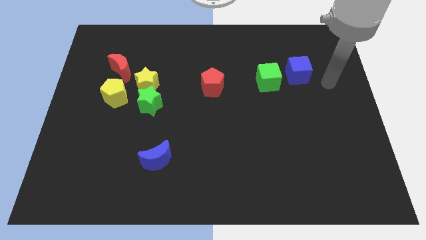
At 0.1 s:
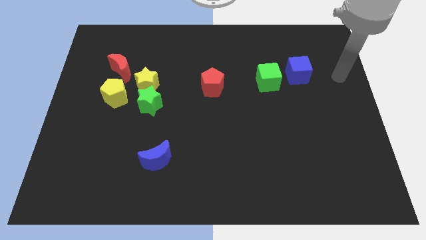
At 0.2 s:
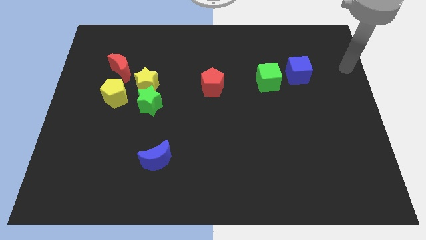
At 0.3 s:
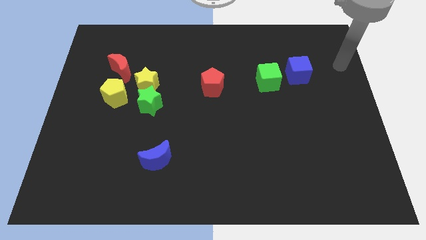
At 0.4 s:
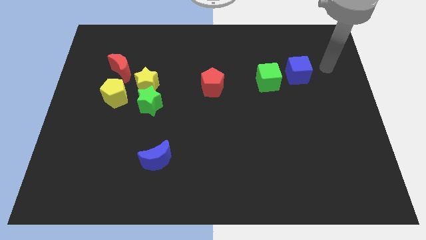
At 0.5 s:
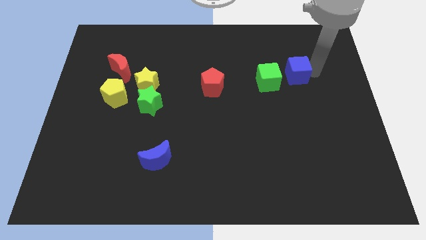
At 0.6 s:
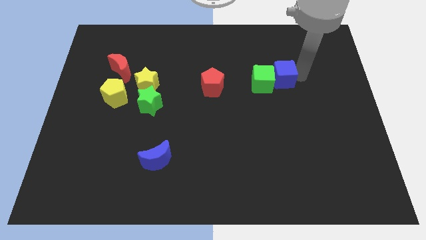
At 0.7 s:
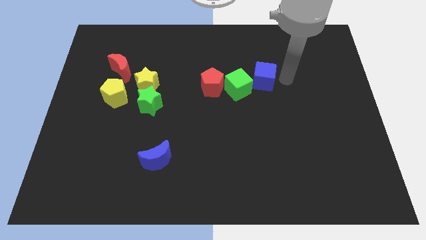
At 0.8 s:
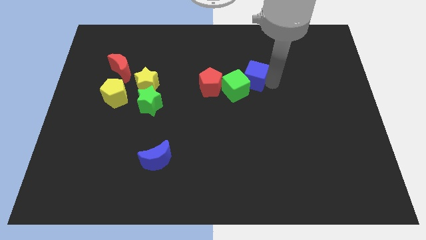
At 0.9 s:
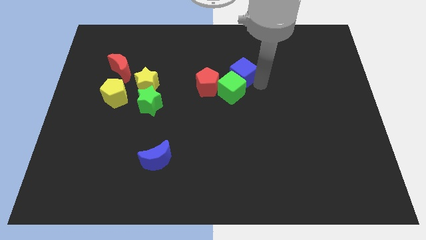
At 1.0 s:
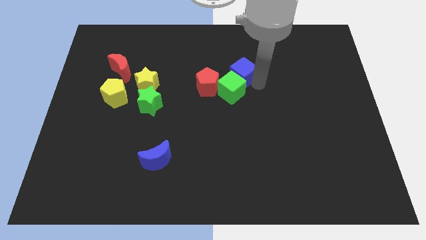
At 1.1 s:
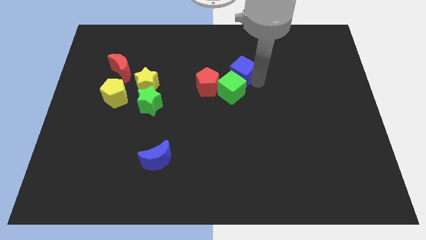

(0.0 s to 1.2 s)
push the blue cube into the green cube

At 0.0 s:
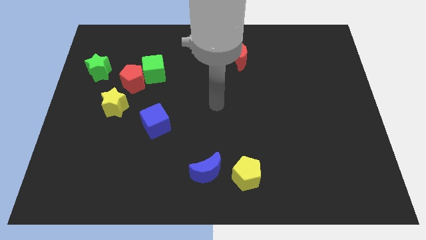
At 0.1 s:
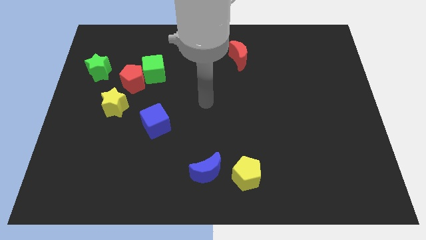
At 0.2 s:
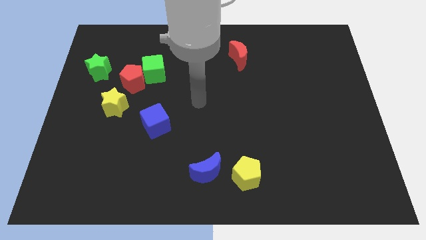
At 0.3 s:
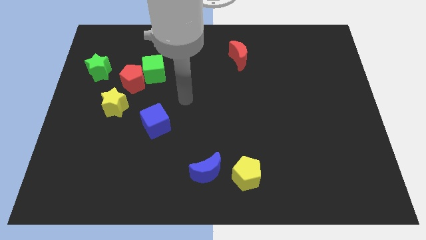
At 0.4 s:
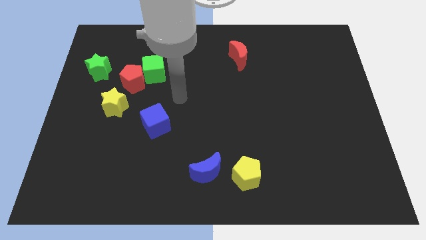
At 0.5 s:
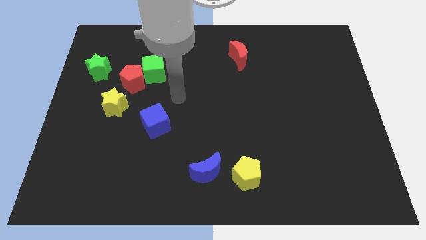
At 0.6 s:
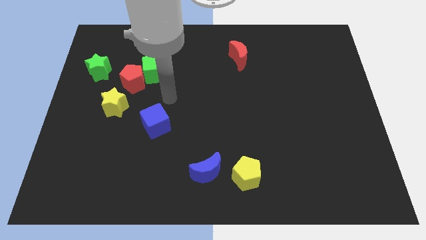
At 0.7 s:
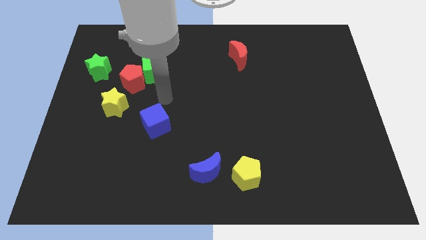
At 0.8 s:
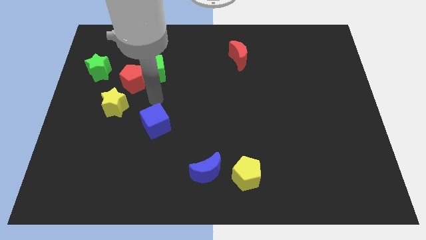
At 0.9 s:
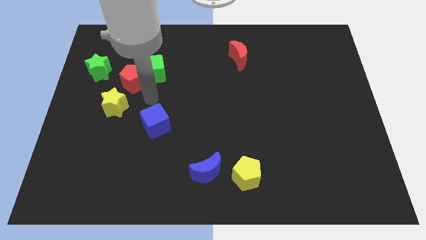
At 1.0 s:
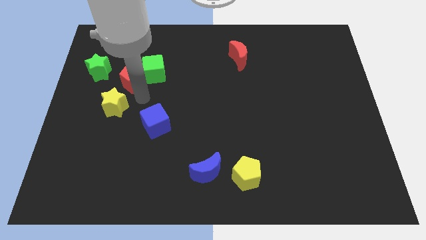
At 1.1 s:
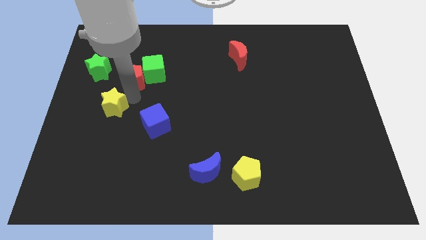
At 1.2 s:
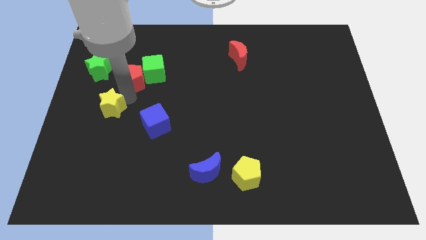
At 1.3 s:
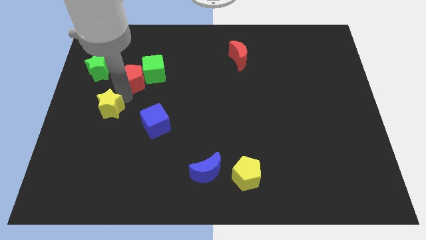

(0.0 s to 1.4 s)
put your arm in between the yellow star and red pentagon

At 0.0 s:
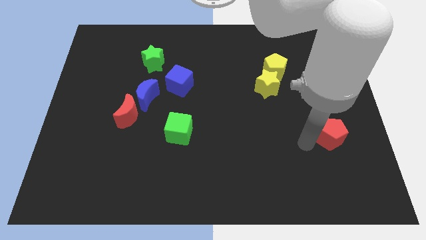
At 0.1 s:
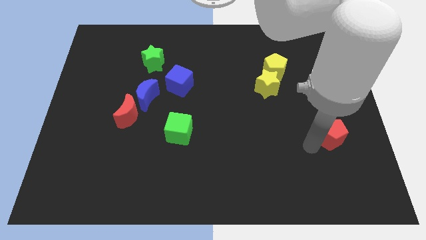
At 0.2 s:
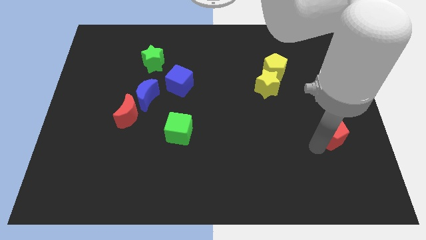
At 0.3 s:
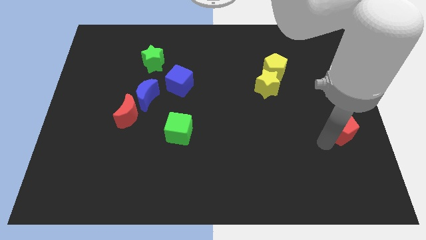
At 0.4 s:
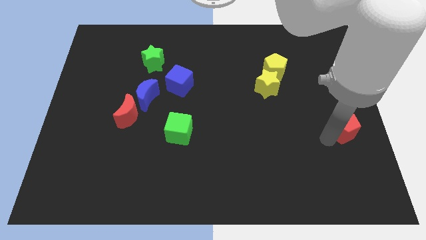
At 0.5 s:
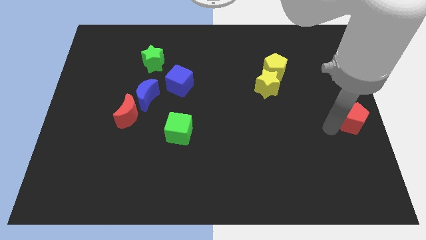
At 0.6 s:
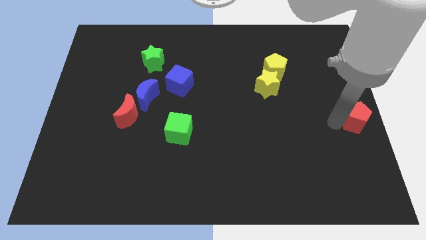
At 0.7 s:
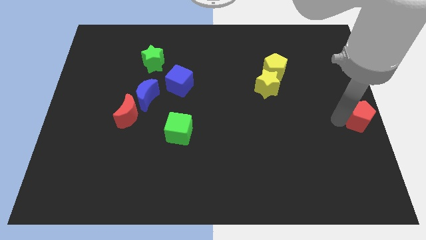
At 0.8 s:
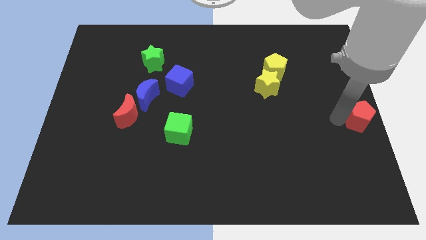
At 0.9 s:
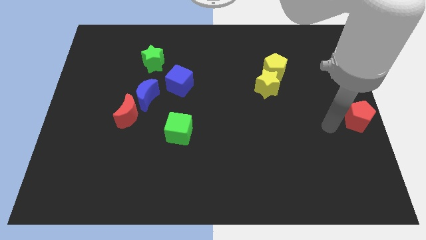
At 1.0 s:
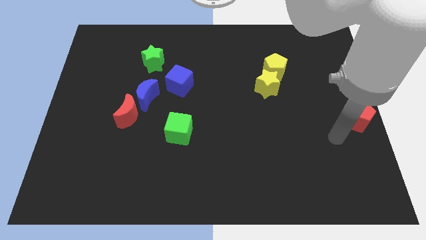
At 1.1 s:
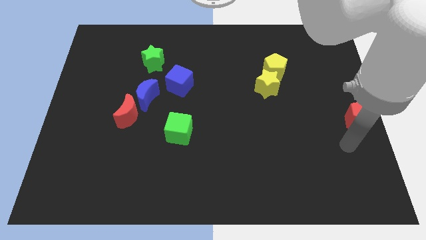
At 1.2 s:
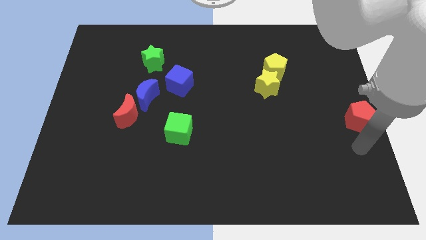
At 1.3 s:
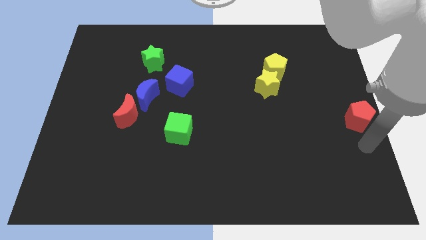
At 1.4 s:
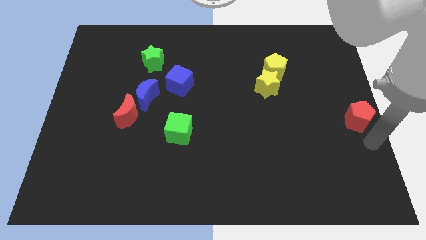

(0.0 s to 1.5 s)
move the red pentagon to the center right

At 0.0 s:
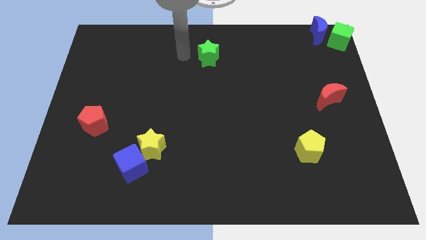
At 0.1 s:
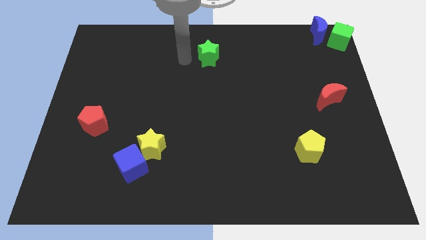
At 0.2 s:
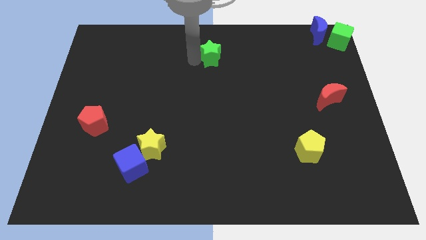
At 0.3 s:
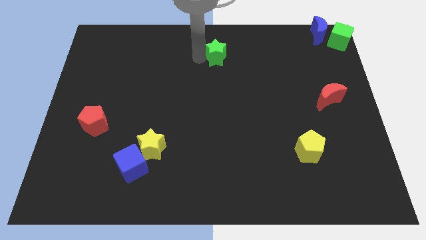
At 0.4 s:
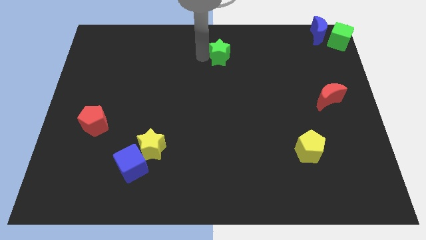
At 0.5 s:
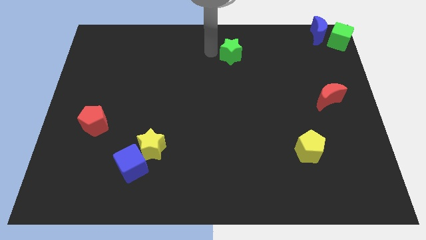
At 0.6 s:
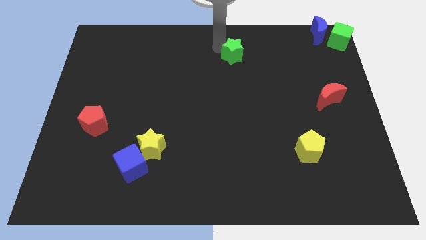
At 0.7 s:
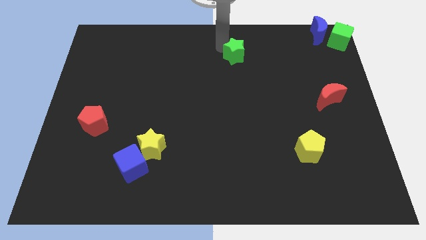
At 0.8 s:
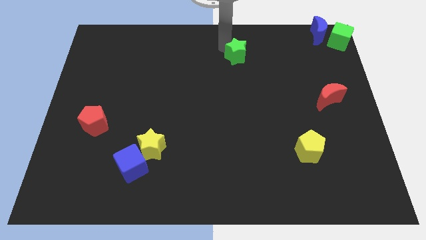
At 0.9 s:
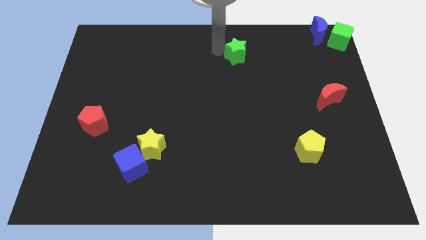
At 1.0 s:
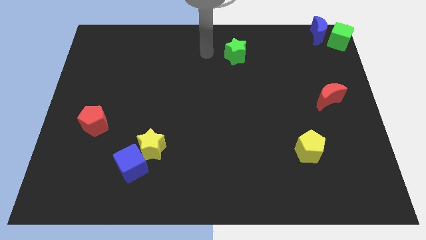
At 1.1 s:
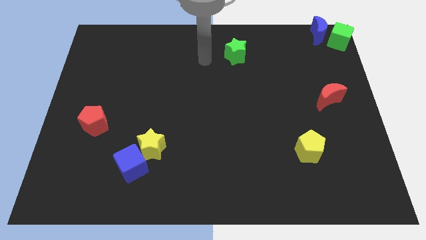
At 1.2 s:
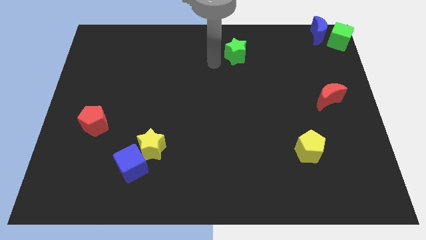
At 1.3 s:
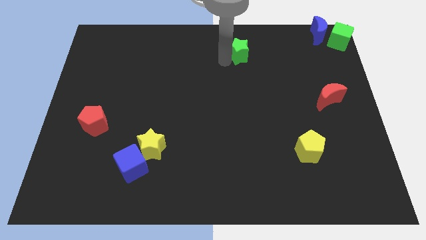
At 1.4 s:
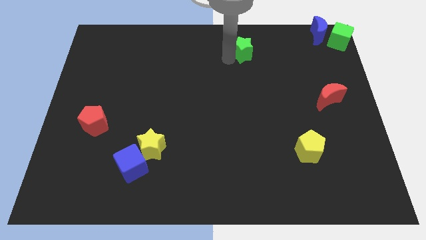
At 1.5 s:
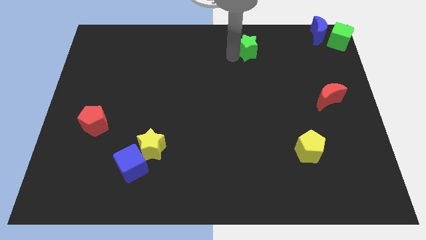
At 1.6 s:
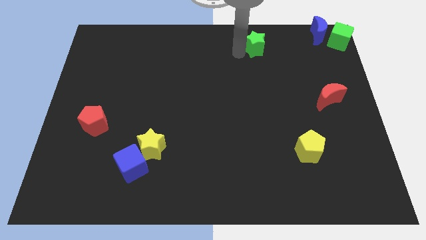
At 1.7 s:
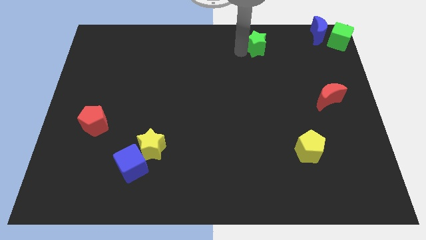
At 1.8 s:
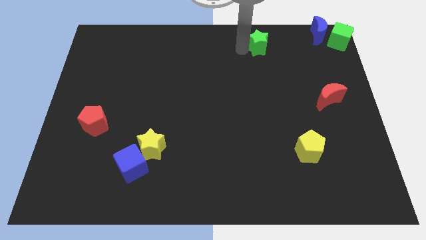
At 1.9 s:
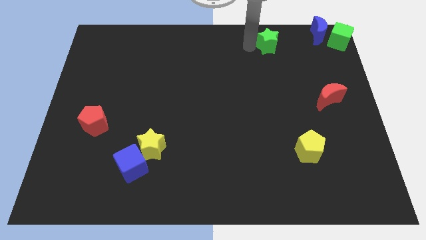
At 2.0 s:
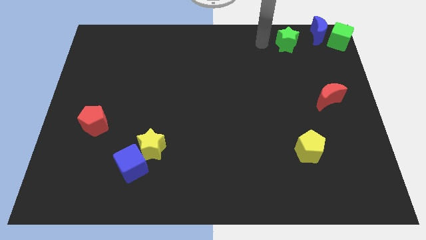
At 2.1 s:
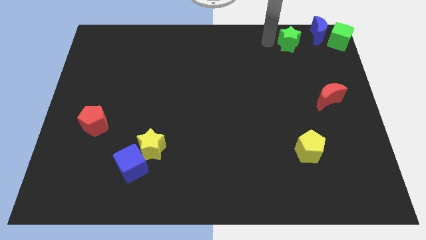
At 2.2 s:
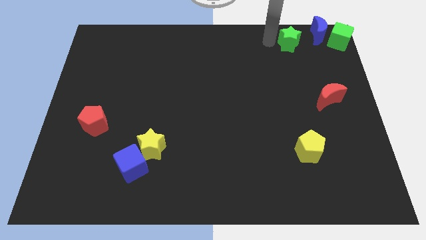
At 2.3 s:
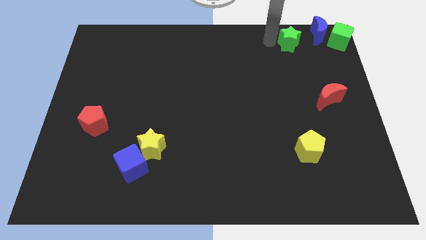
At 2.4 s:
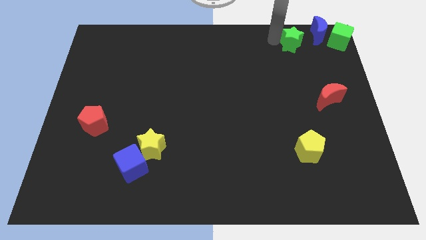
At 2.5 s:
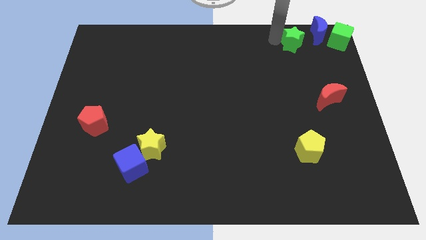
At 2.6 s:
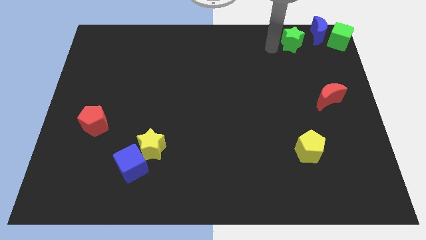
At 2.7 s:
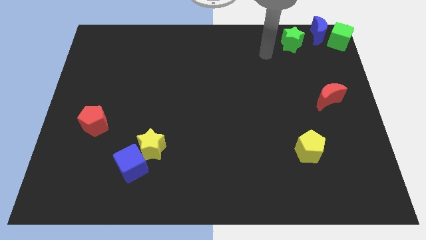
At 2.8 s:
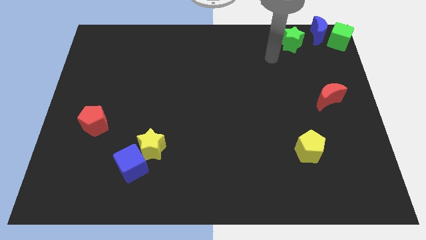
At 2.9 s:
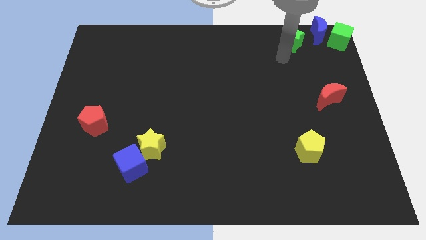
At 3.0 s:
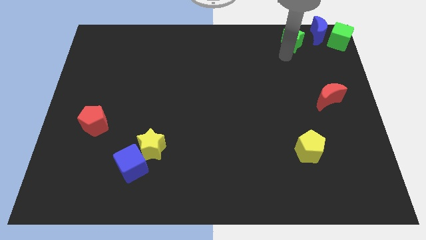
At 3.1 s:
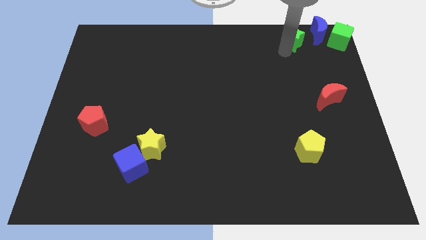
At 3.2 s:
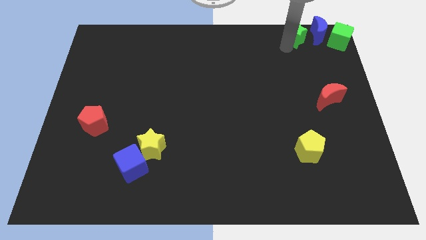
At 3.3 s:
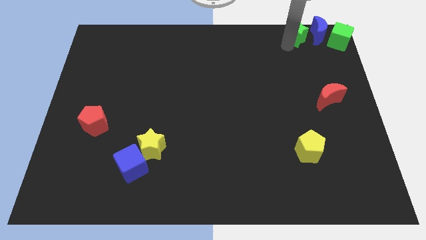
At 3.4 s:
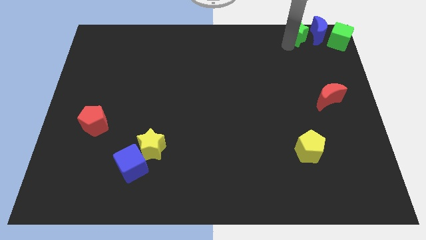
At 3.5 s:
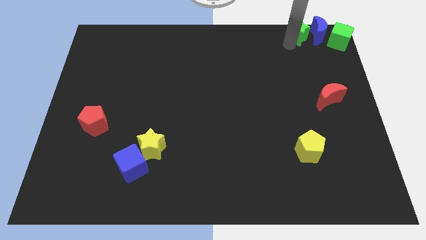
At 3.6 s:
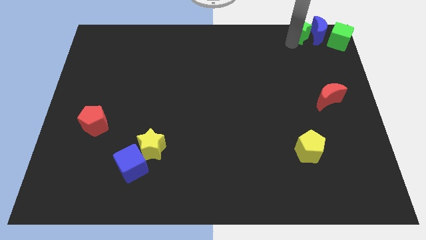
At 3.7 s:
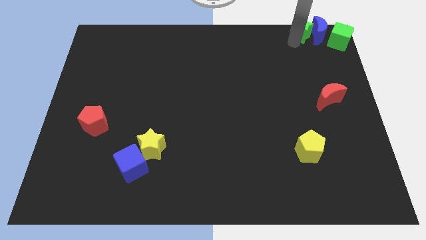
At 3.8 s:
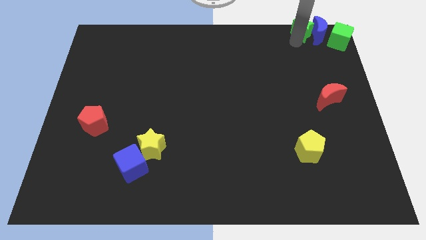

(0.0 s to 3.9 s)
move green star to the left of blue crescent

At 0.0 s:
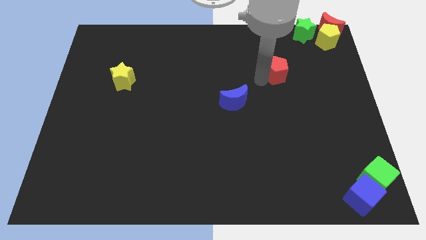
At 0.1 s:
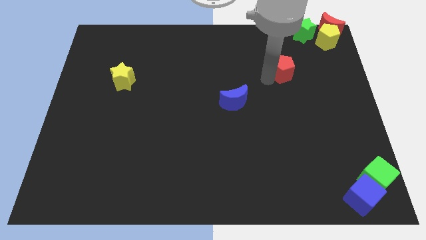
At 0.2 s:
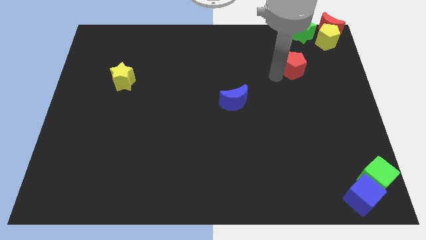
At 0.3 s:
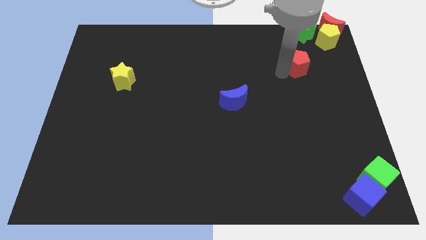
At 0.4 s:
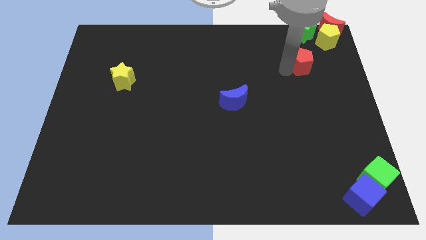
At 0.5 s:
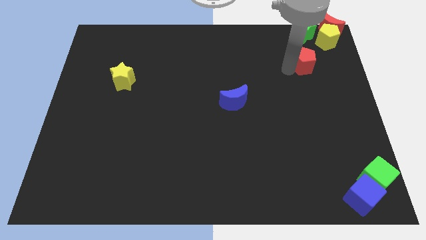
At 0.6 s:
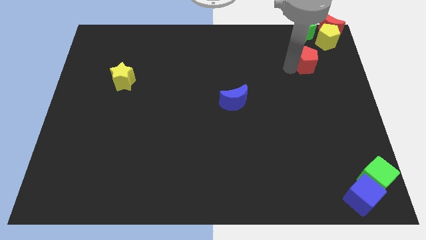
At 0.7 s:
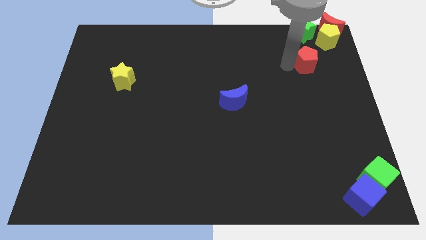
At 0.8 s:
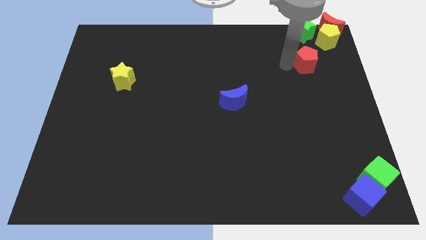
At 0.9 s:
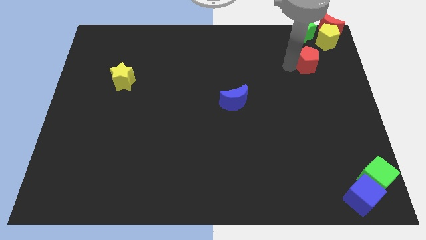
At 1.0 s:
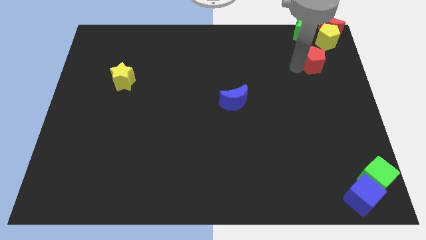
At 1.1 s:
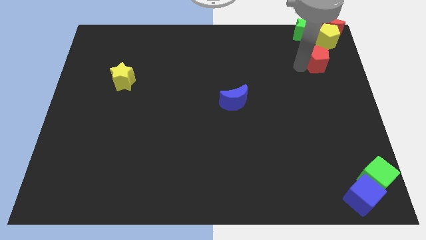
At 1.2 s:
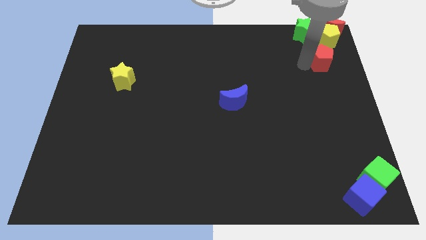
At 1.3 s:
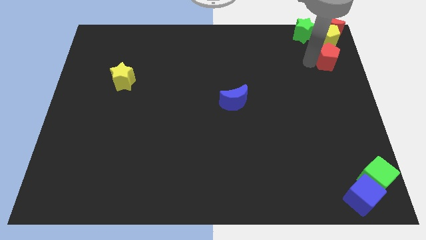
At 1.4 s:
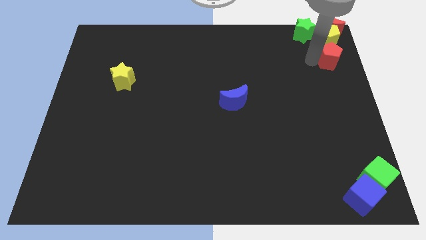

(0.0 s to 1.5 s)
place the red pentagon below the yellow pentagon
